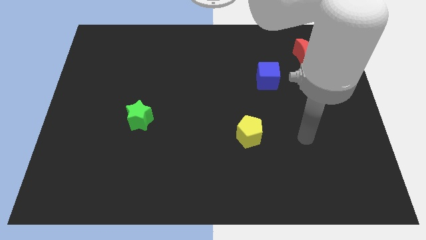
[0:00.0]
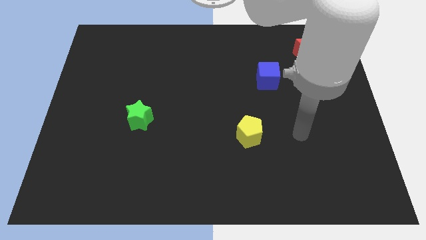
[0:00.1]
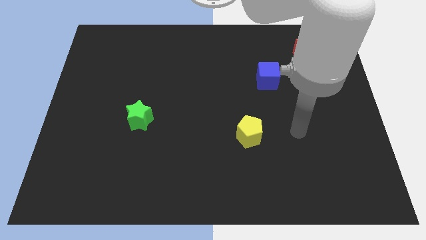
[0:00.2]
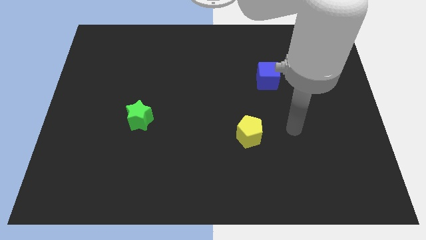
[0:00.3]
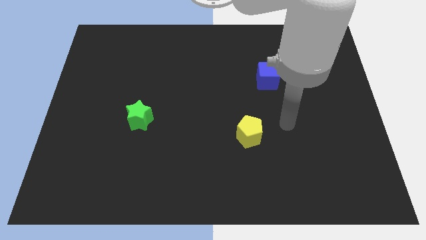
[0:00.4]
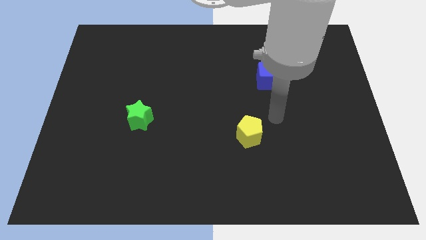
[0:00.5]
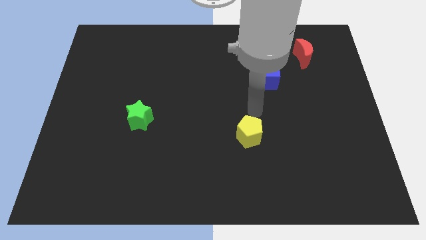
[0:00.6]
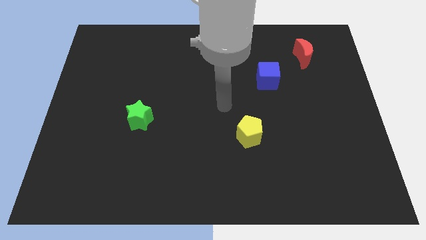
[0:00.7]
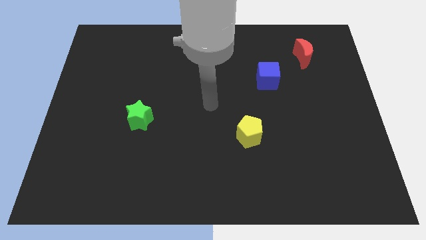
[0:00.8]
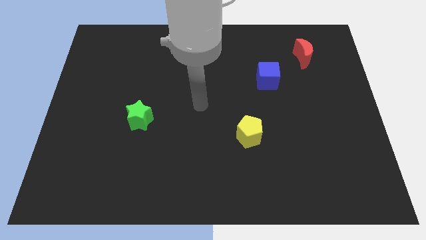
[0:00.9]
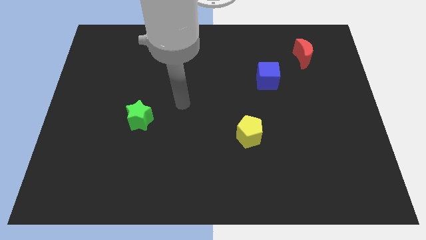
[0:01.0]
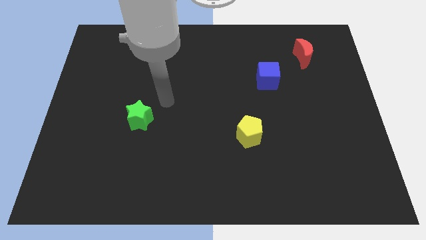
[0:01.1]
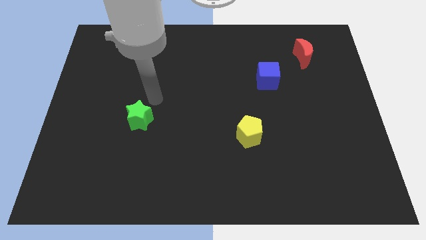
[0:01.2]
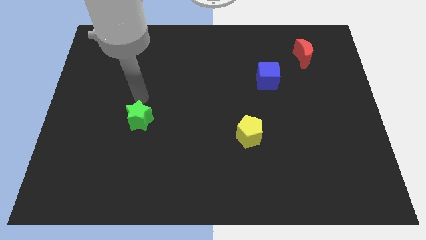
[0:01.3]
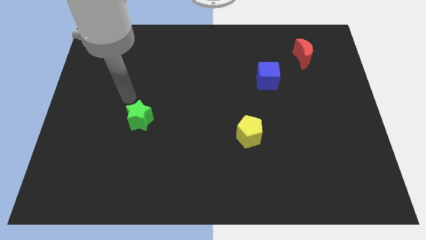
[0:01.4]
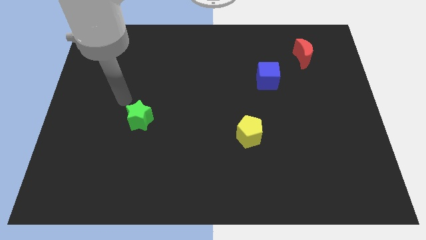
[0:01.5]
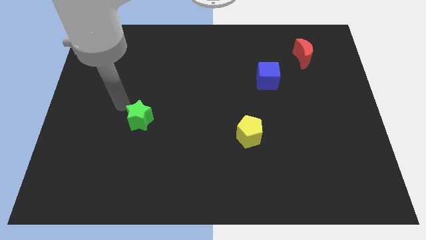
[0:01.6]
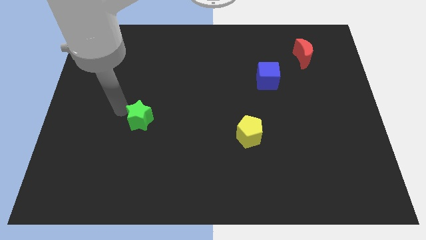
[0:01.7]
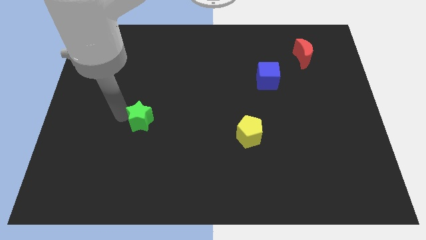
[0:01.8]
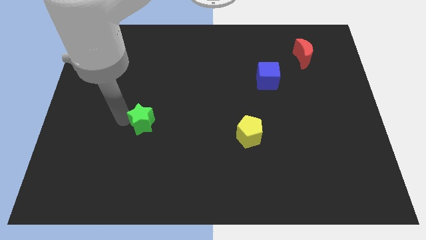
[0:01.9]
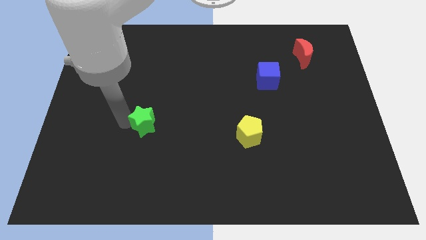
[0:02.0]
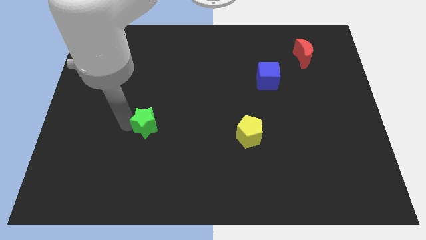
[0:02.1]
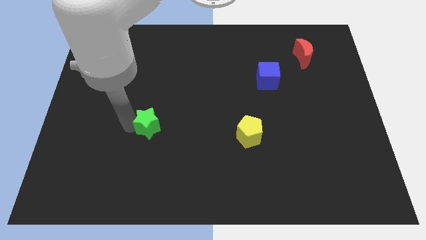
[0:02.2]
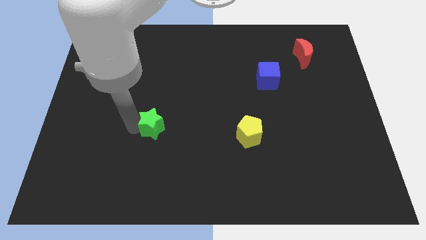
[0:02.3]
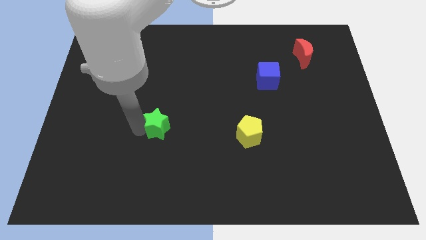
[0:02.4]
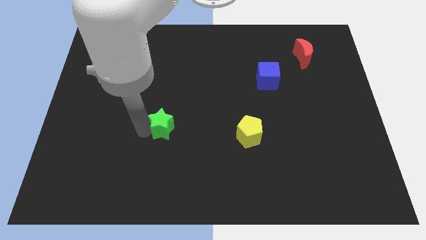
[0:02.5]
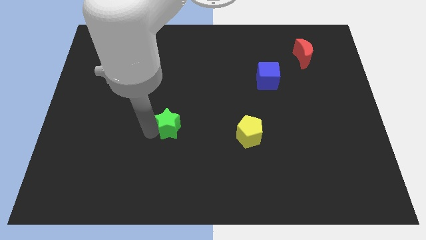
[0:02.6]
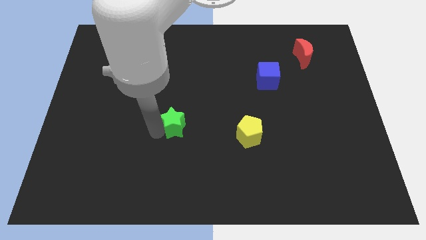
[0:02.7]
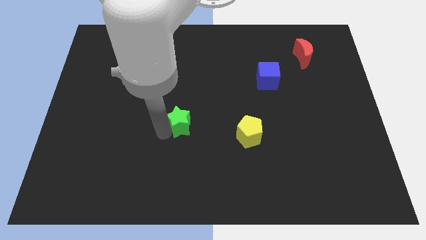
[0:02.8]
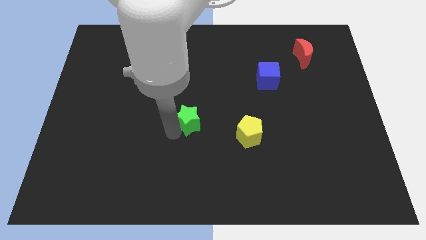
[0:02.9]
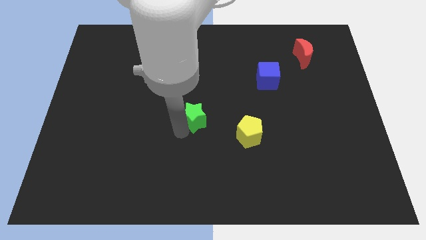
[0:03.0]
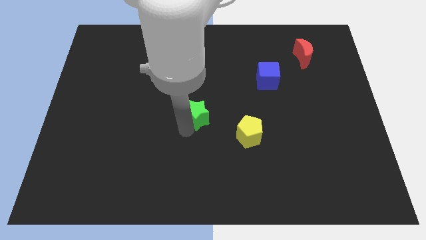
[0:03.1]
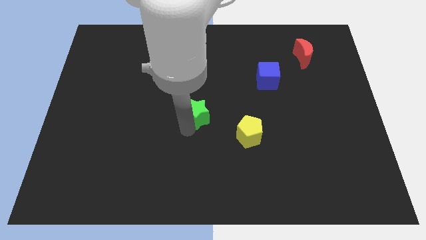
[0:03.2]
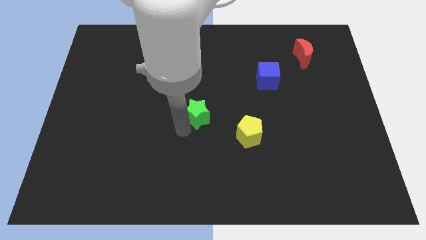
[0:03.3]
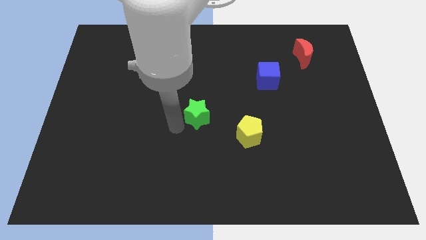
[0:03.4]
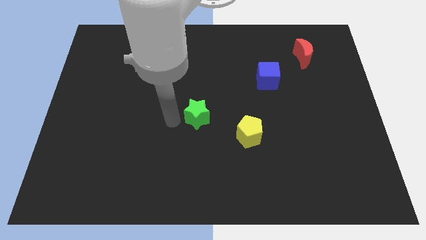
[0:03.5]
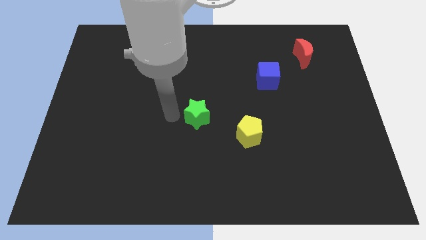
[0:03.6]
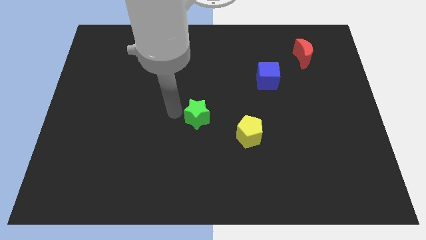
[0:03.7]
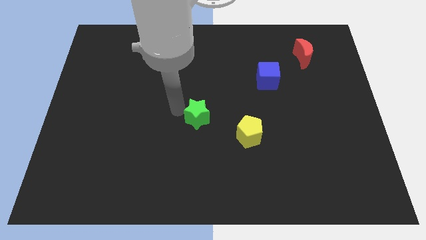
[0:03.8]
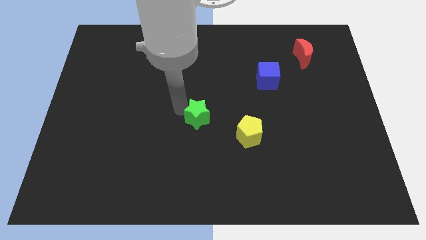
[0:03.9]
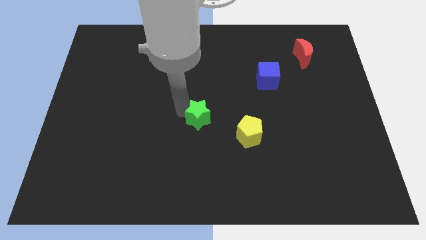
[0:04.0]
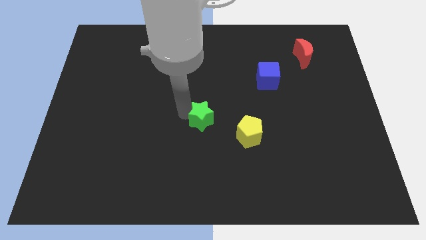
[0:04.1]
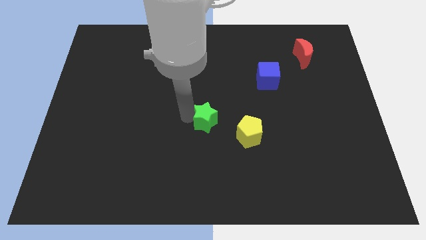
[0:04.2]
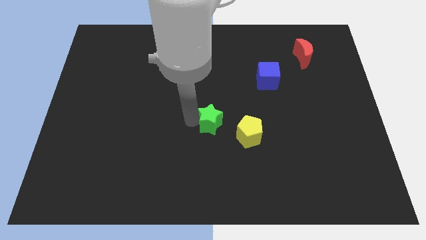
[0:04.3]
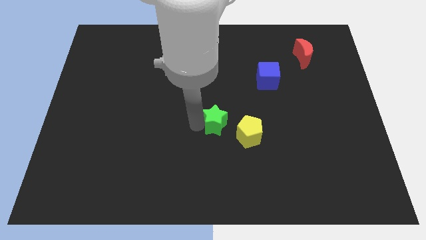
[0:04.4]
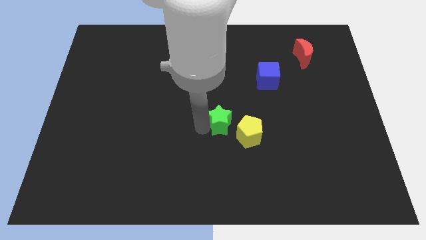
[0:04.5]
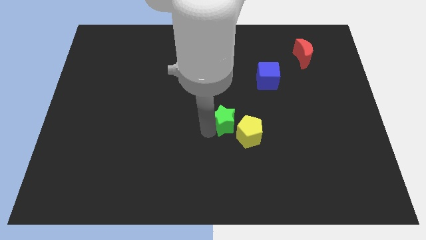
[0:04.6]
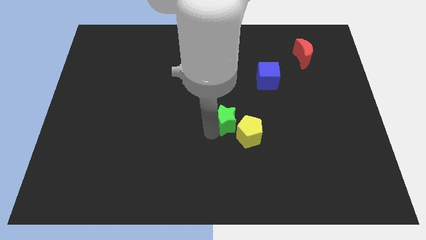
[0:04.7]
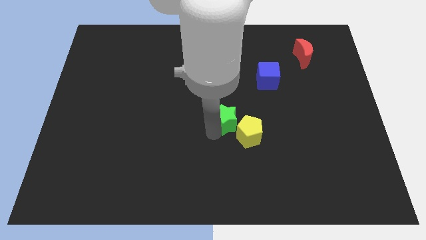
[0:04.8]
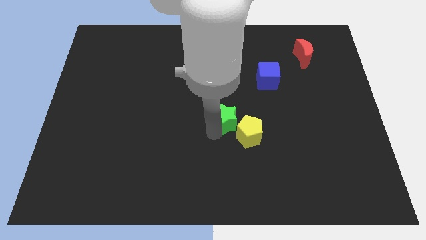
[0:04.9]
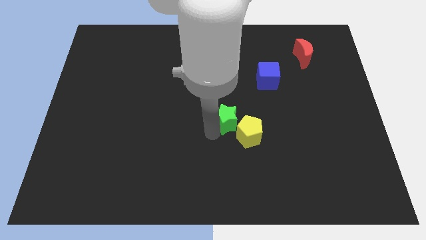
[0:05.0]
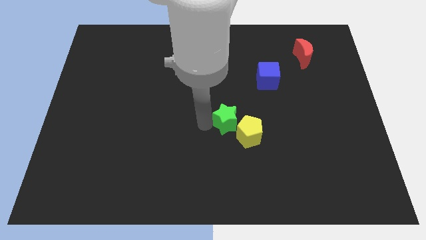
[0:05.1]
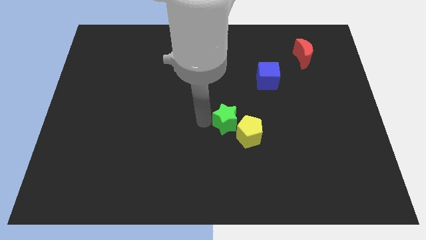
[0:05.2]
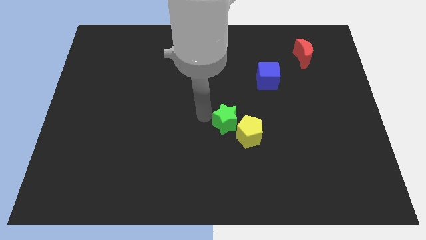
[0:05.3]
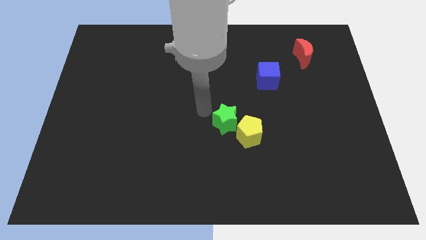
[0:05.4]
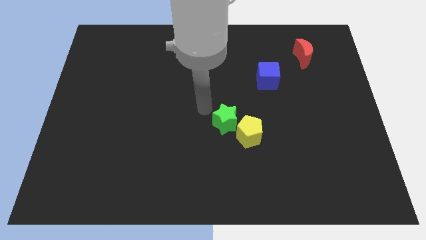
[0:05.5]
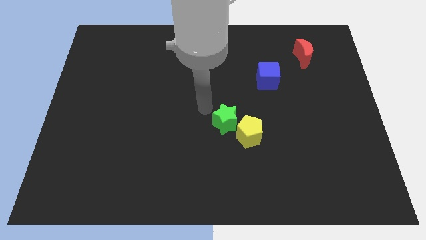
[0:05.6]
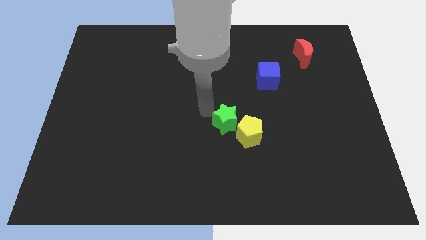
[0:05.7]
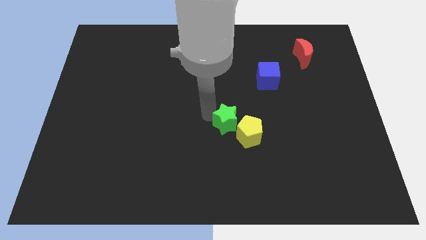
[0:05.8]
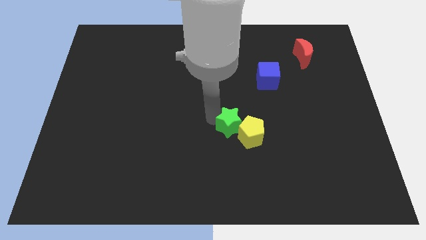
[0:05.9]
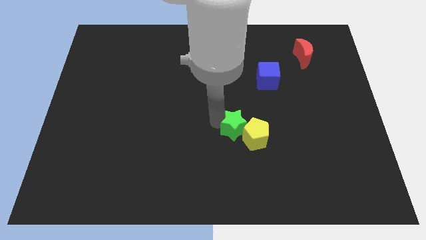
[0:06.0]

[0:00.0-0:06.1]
push the green star to the yellow pentagon

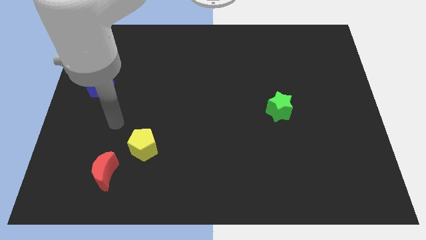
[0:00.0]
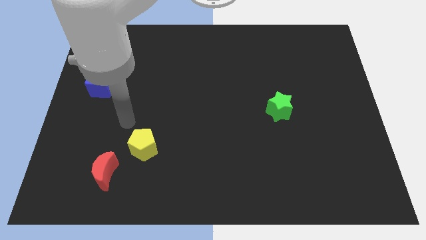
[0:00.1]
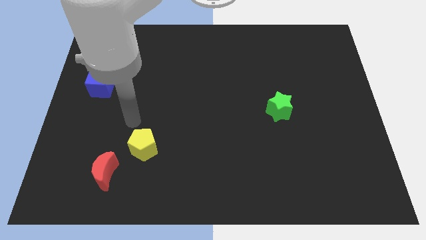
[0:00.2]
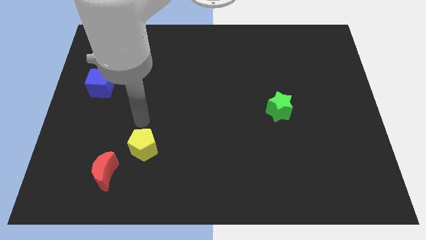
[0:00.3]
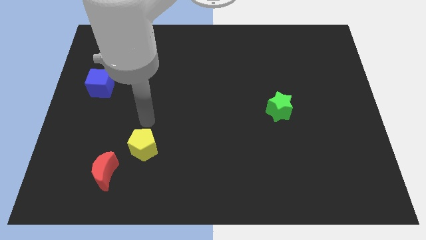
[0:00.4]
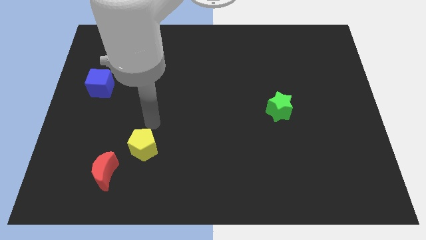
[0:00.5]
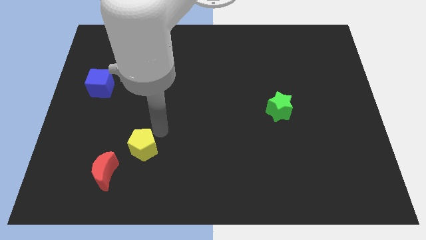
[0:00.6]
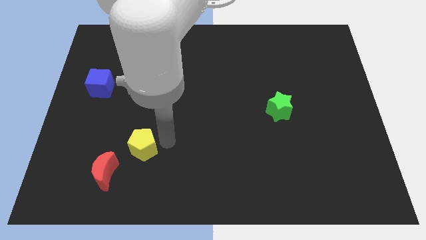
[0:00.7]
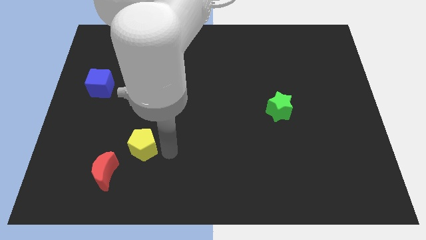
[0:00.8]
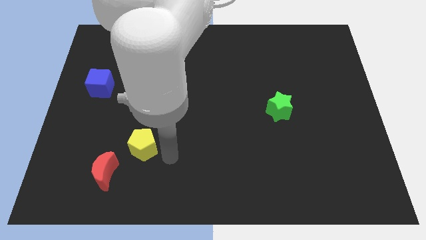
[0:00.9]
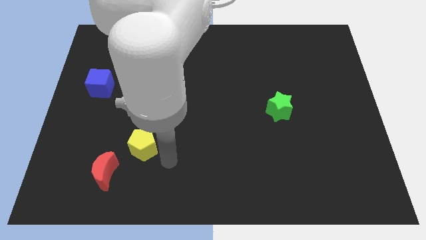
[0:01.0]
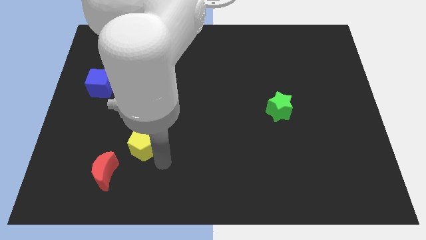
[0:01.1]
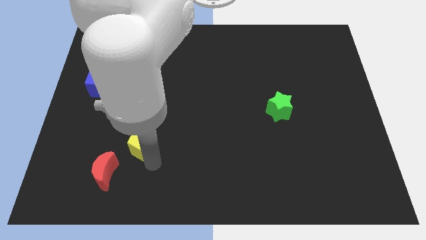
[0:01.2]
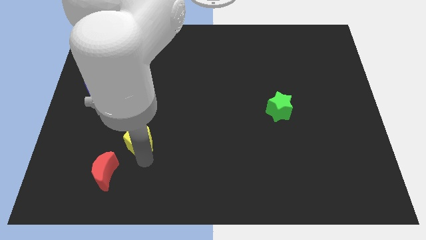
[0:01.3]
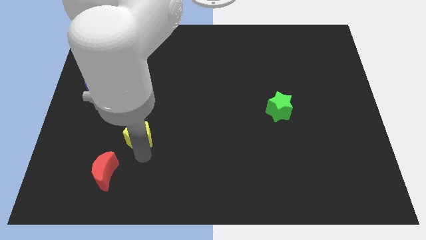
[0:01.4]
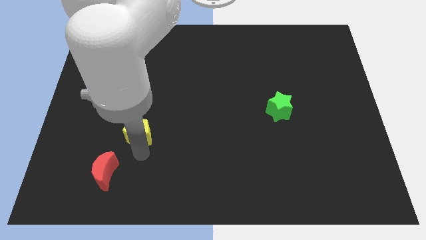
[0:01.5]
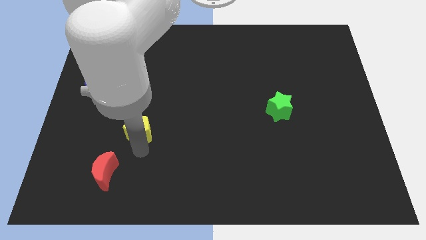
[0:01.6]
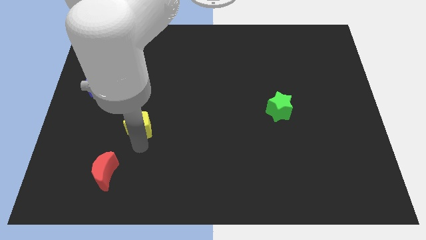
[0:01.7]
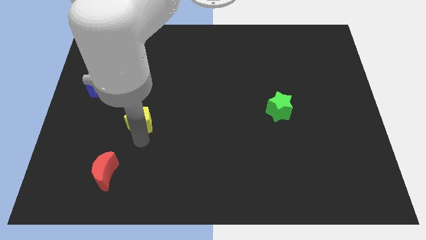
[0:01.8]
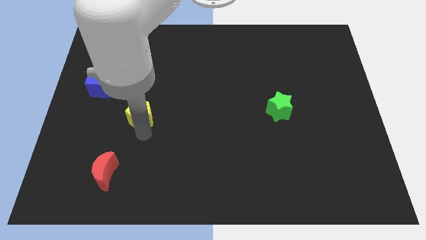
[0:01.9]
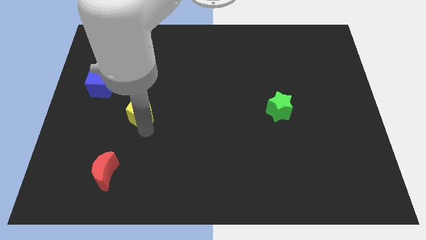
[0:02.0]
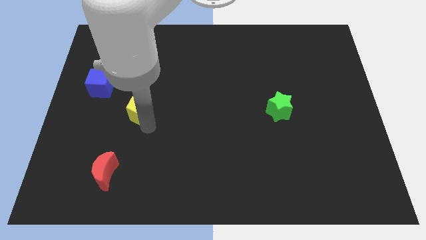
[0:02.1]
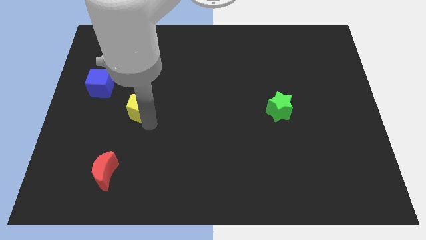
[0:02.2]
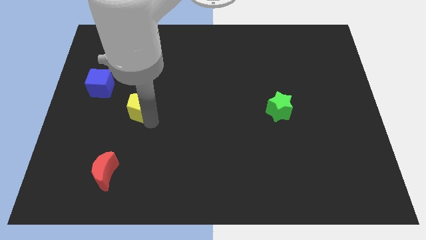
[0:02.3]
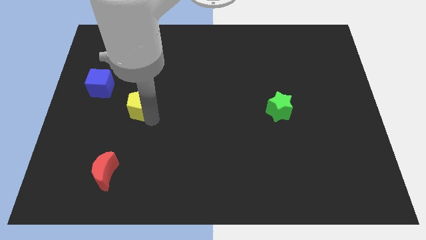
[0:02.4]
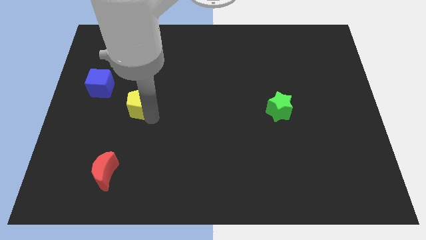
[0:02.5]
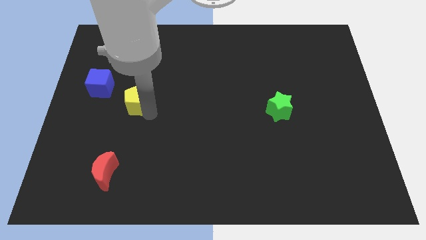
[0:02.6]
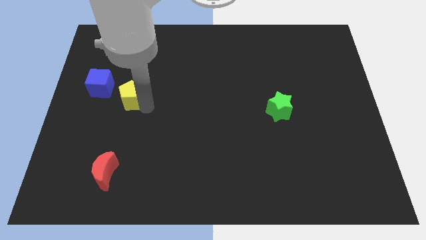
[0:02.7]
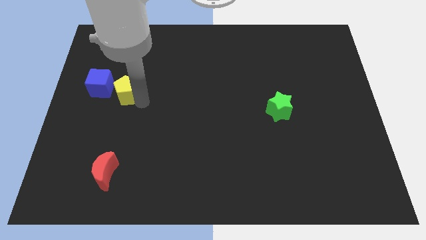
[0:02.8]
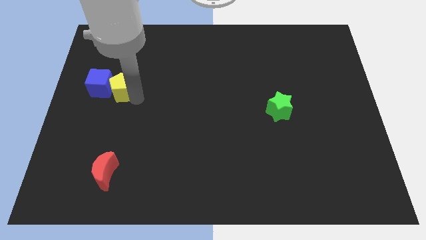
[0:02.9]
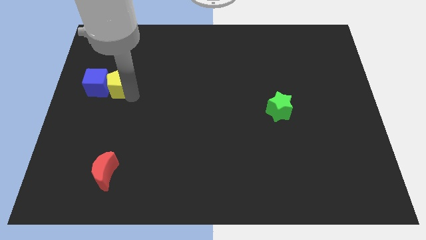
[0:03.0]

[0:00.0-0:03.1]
put the yellow pentagon next to the blue cube
